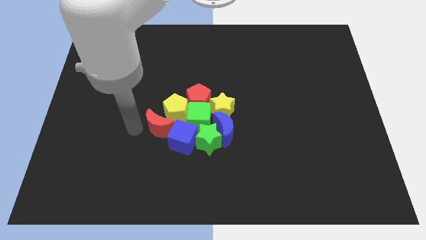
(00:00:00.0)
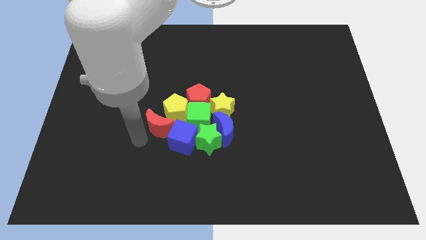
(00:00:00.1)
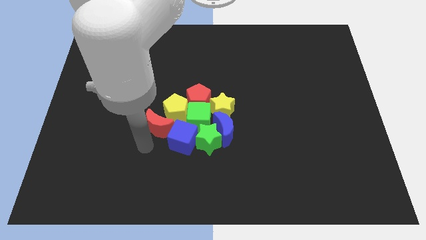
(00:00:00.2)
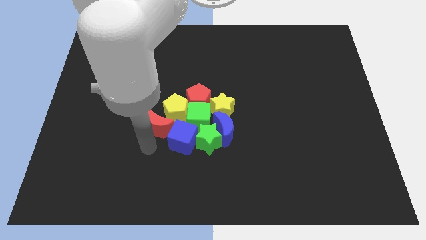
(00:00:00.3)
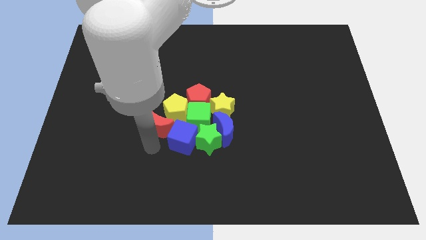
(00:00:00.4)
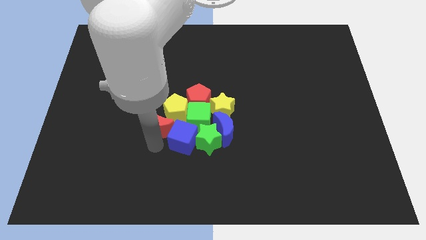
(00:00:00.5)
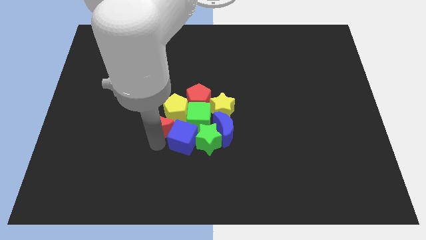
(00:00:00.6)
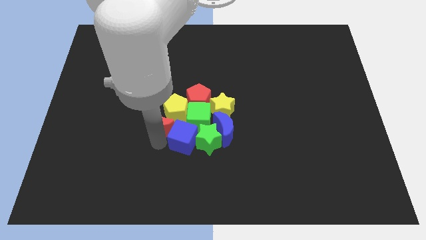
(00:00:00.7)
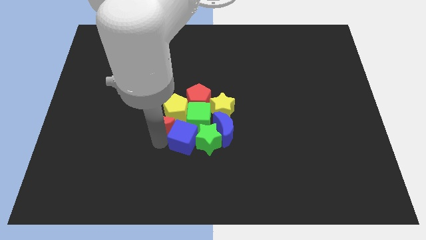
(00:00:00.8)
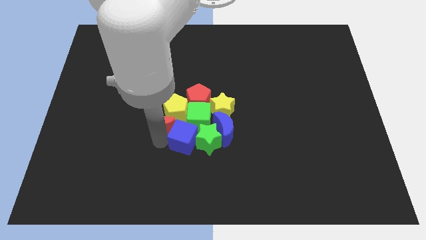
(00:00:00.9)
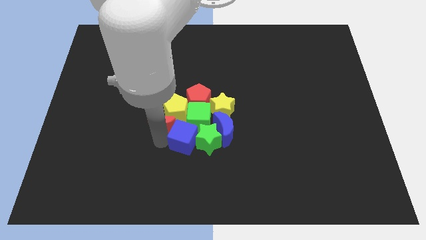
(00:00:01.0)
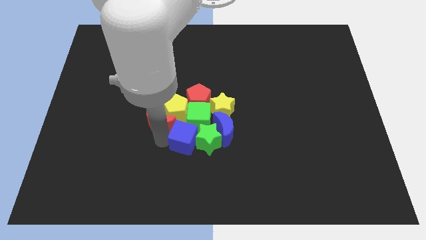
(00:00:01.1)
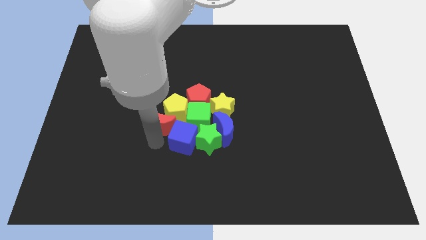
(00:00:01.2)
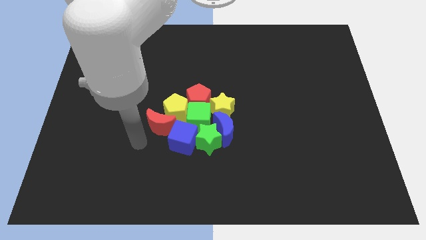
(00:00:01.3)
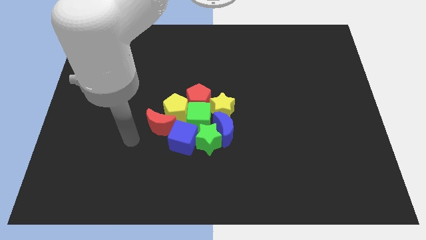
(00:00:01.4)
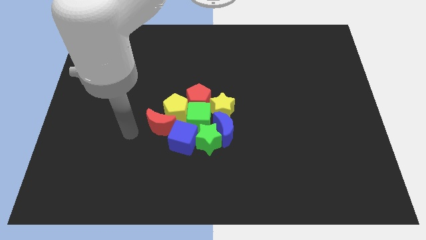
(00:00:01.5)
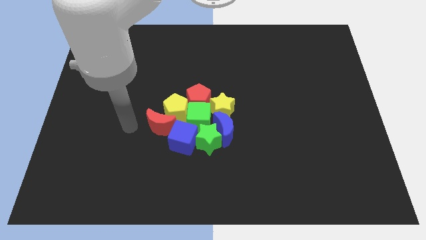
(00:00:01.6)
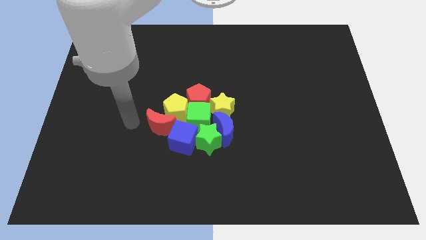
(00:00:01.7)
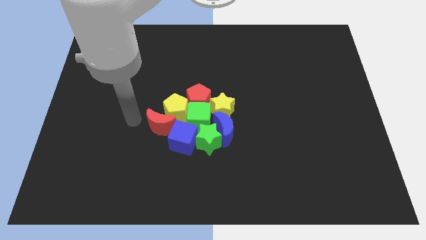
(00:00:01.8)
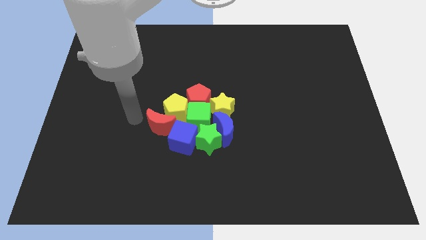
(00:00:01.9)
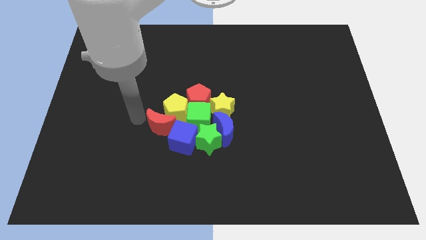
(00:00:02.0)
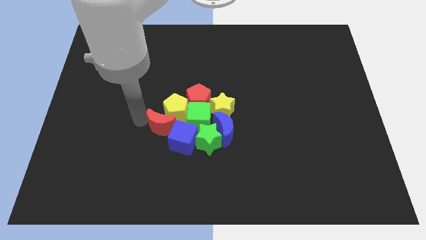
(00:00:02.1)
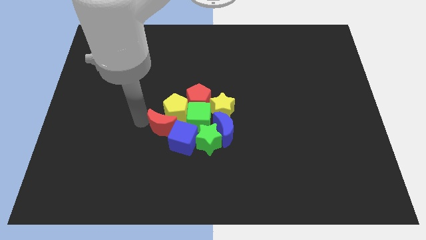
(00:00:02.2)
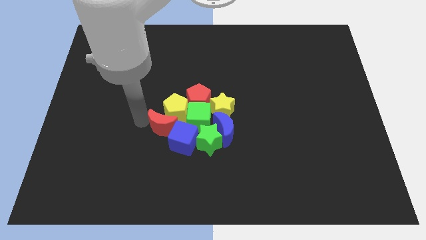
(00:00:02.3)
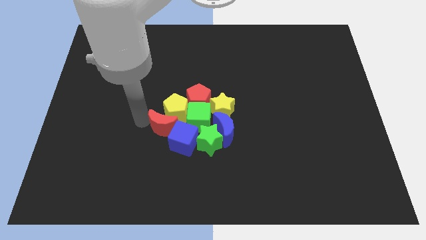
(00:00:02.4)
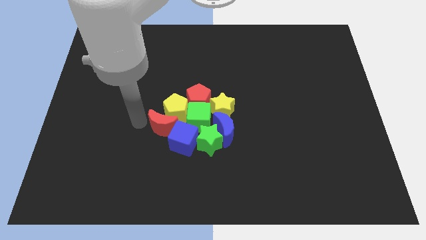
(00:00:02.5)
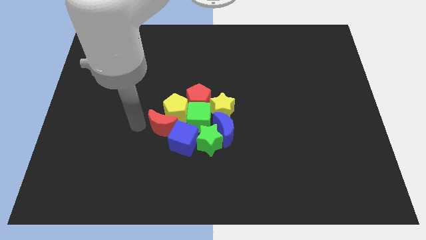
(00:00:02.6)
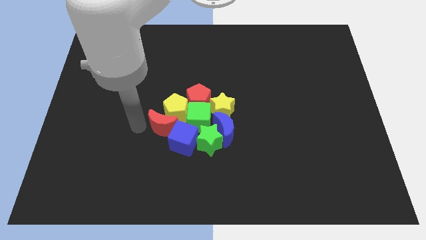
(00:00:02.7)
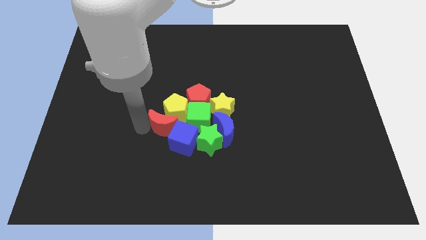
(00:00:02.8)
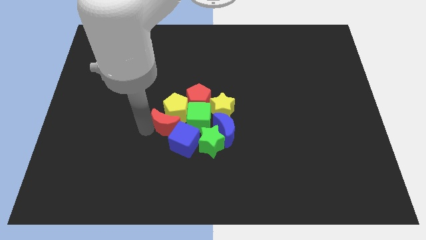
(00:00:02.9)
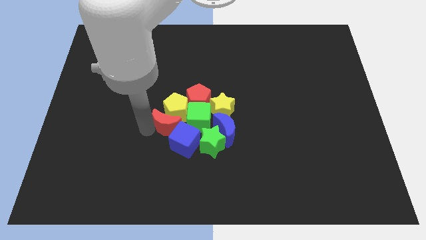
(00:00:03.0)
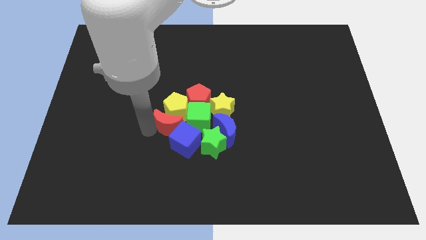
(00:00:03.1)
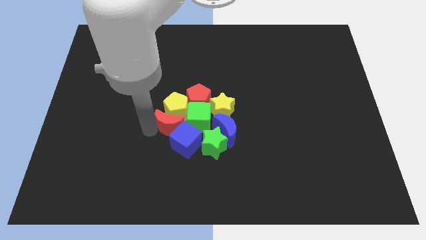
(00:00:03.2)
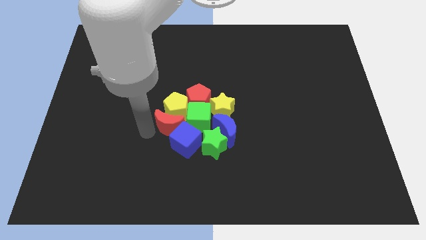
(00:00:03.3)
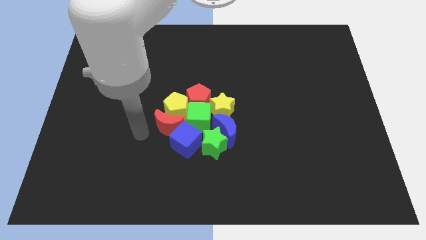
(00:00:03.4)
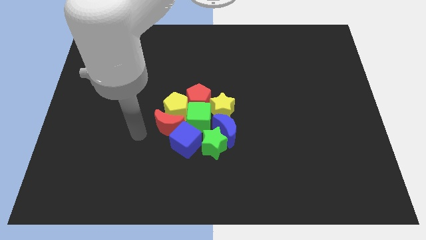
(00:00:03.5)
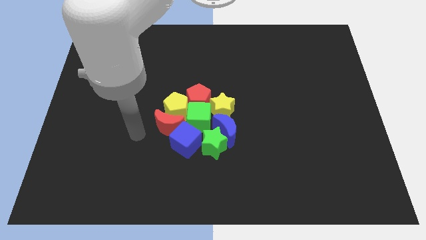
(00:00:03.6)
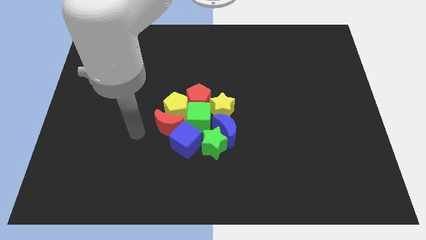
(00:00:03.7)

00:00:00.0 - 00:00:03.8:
place the red moon between the blue cube and yellow pentagon

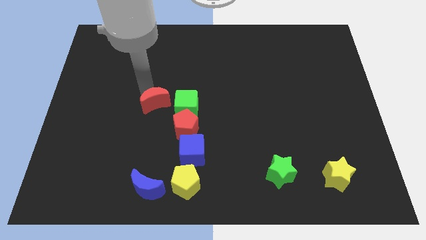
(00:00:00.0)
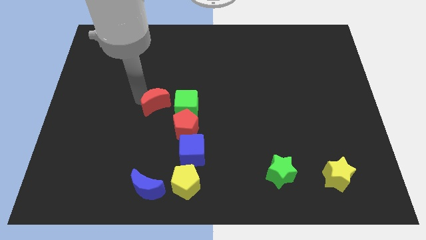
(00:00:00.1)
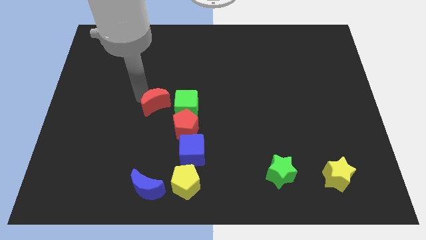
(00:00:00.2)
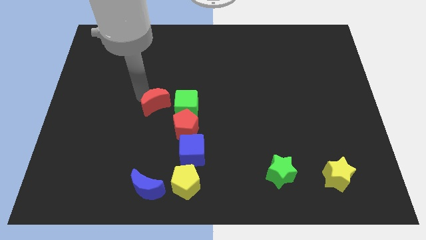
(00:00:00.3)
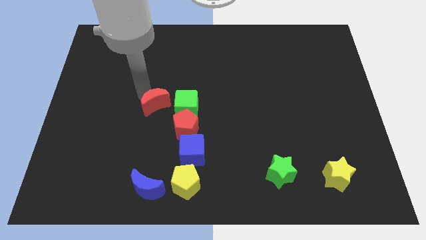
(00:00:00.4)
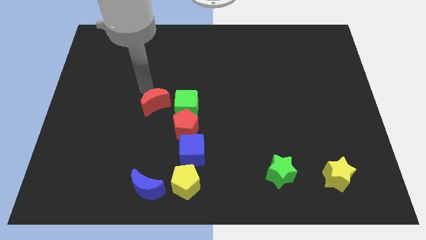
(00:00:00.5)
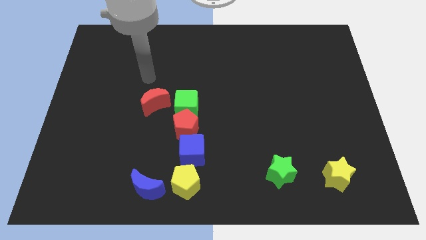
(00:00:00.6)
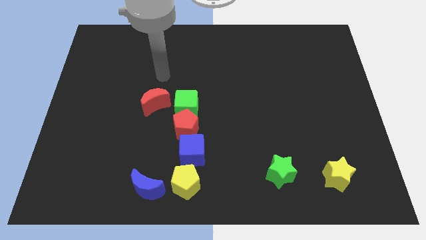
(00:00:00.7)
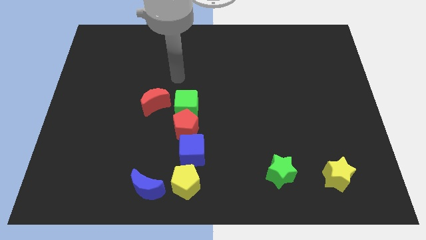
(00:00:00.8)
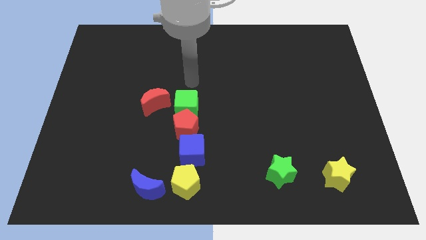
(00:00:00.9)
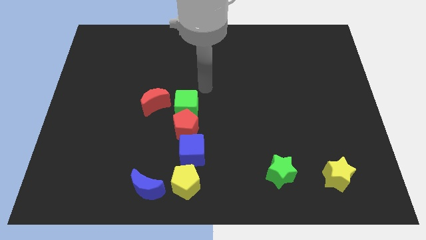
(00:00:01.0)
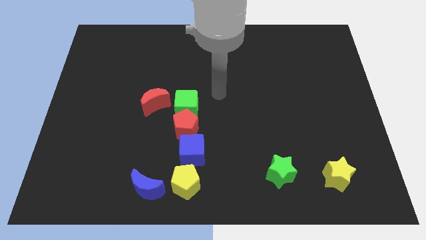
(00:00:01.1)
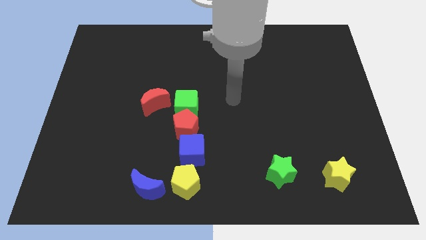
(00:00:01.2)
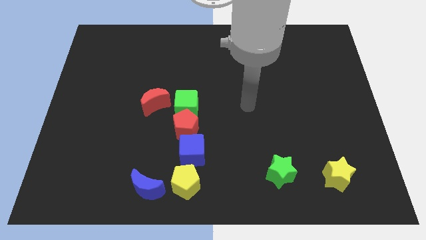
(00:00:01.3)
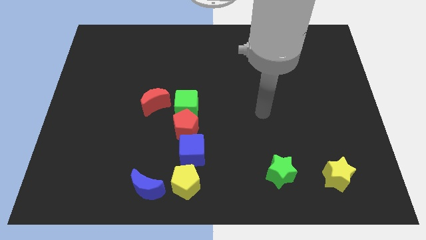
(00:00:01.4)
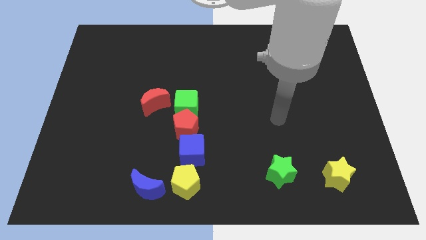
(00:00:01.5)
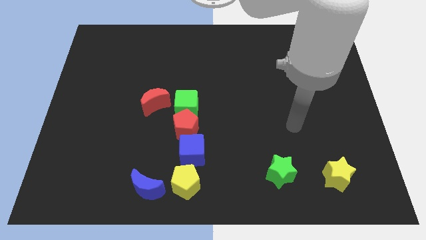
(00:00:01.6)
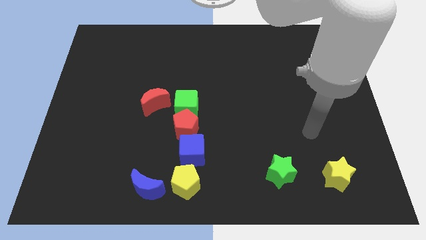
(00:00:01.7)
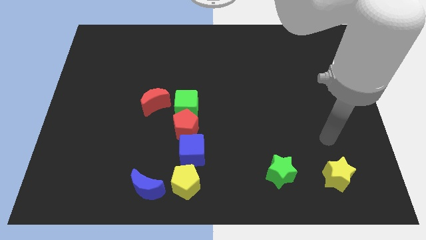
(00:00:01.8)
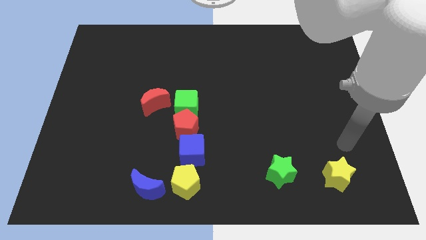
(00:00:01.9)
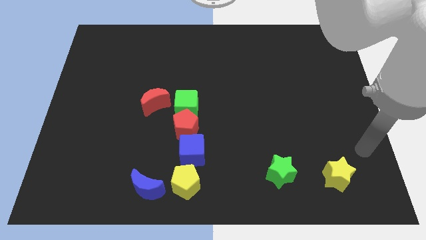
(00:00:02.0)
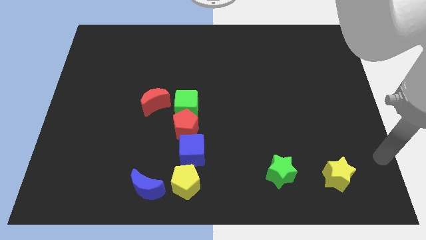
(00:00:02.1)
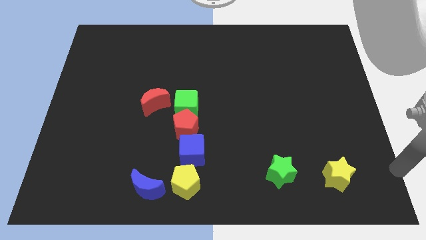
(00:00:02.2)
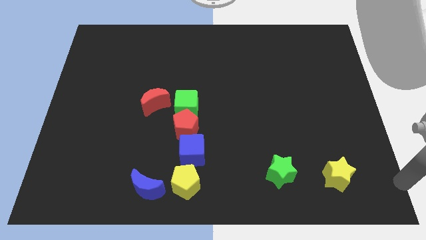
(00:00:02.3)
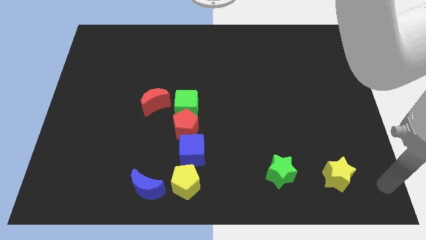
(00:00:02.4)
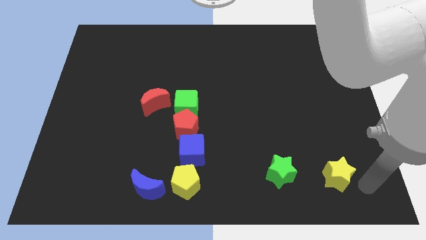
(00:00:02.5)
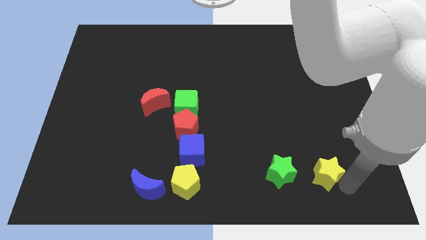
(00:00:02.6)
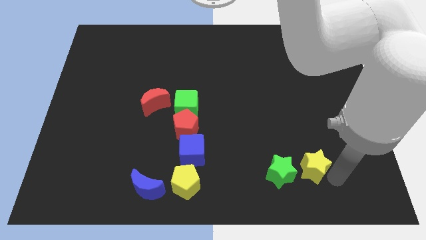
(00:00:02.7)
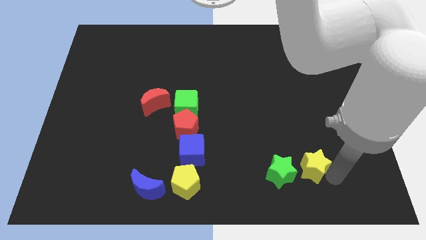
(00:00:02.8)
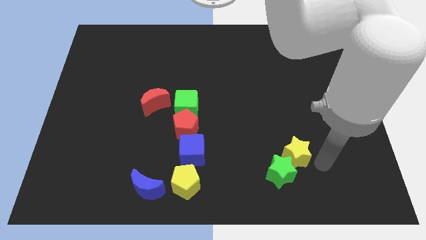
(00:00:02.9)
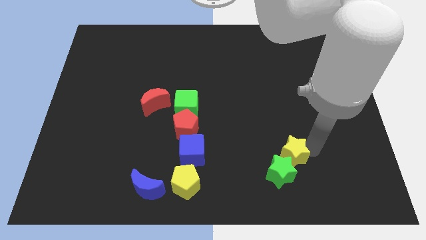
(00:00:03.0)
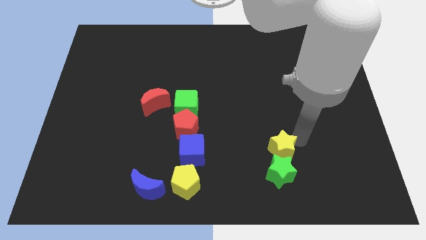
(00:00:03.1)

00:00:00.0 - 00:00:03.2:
push yellow star above green star

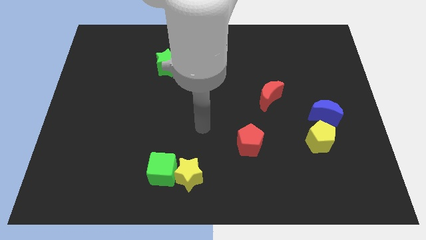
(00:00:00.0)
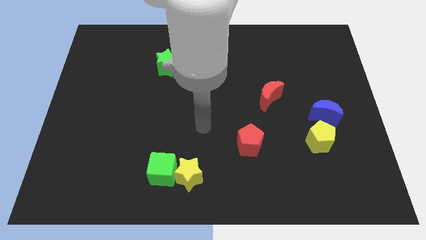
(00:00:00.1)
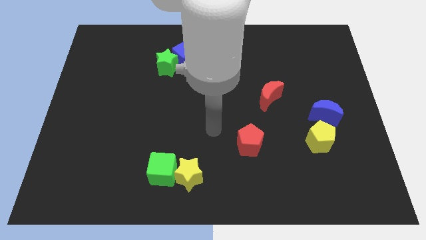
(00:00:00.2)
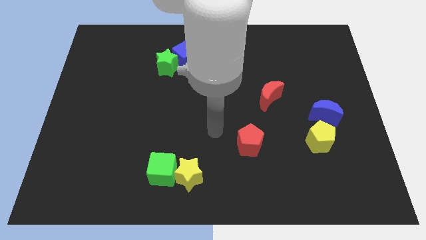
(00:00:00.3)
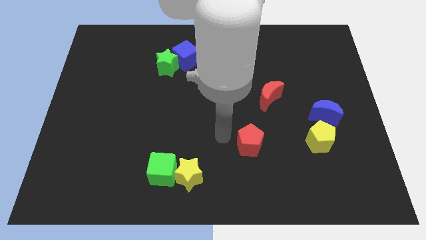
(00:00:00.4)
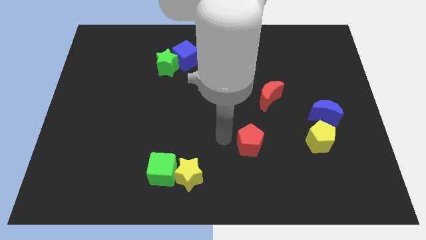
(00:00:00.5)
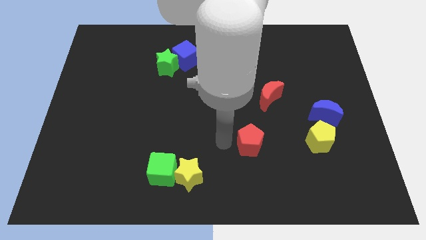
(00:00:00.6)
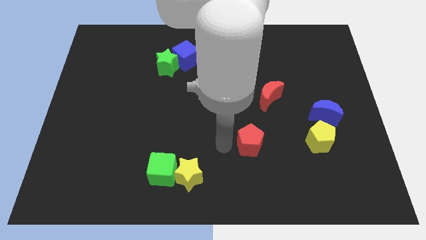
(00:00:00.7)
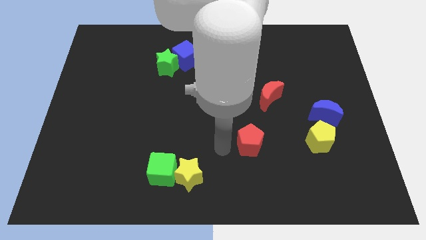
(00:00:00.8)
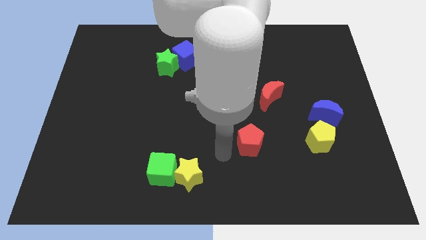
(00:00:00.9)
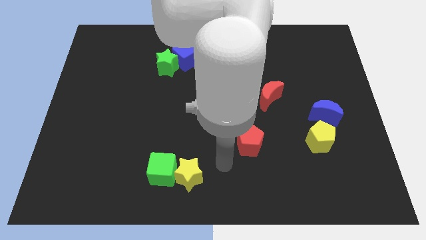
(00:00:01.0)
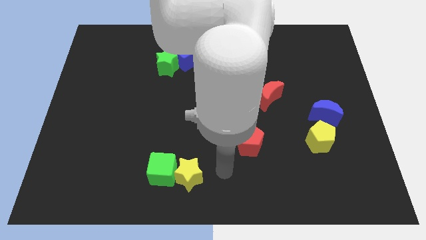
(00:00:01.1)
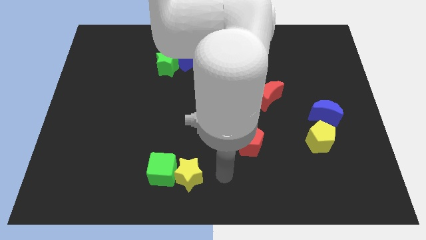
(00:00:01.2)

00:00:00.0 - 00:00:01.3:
point your hand to the right of the yellow star

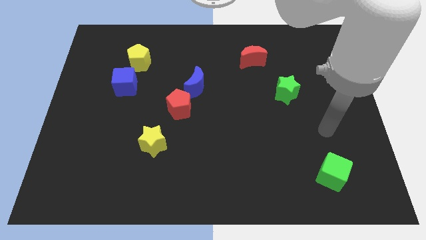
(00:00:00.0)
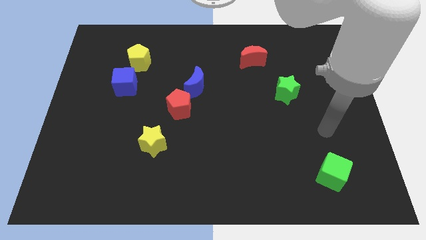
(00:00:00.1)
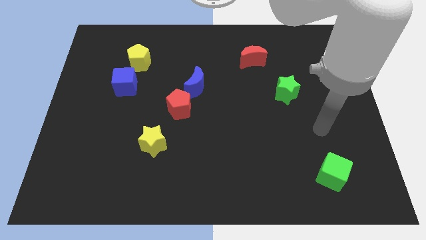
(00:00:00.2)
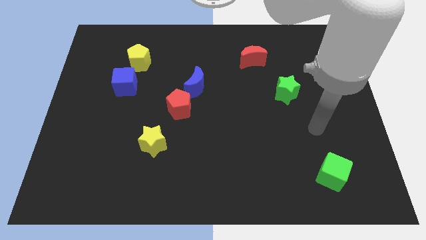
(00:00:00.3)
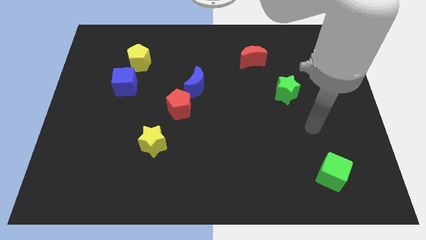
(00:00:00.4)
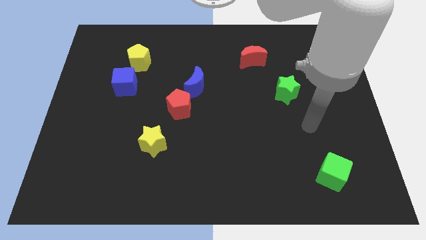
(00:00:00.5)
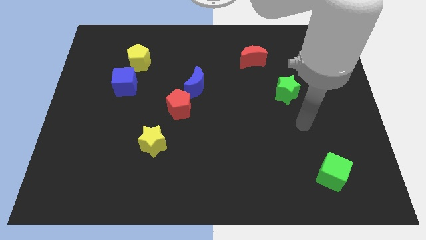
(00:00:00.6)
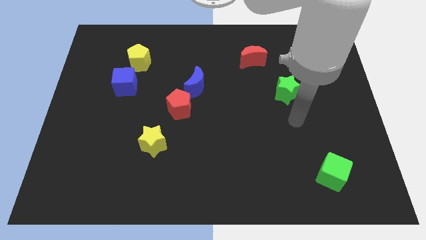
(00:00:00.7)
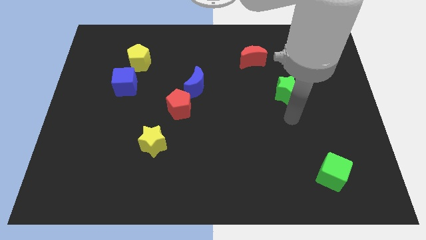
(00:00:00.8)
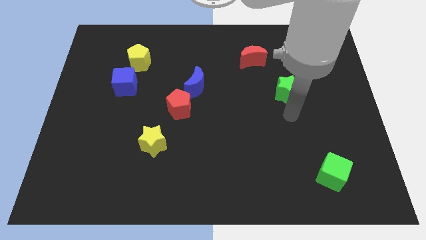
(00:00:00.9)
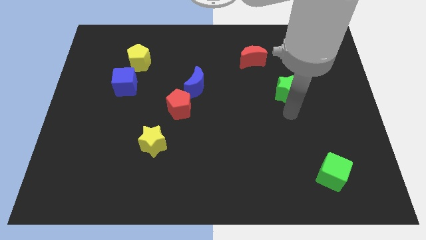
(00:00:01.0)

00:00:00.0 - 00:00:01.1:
slide your arm below the green star
